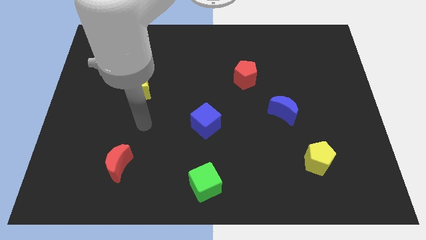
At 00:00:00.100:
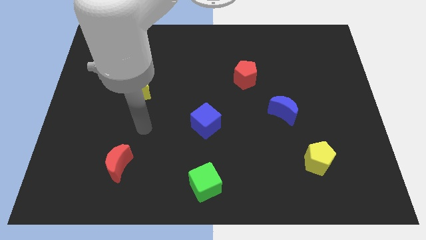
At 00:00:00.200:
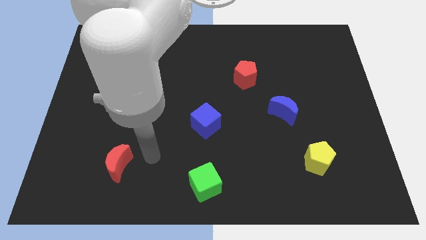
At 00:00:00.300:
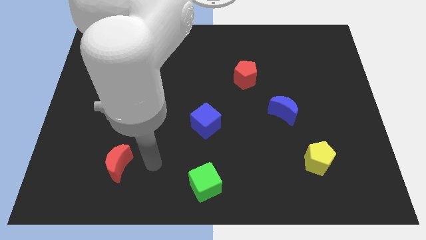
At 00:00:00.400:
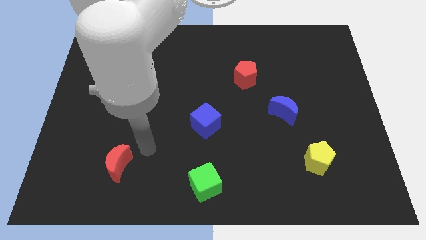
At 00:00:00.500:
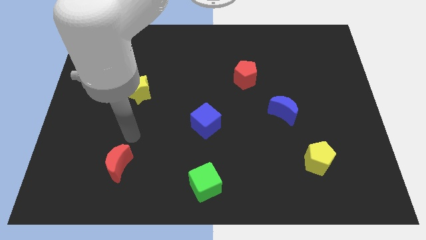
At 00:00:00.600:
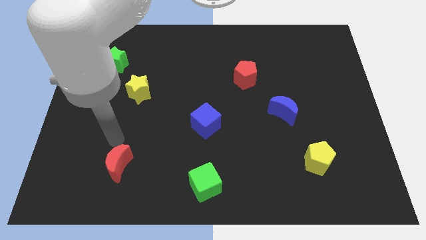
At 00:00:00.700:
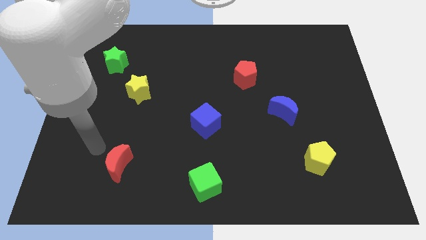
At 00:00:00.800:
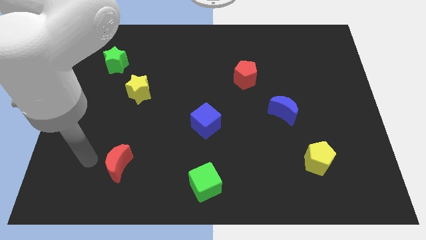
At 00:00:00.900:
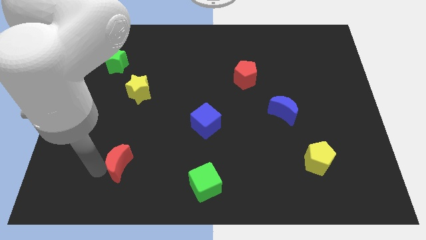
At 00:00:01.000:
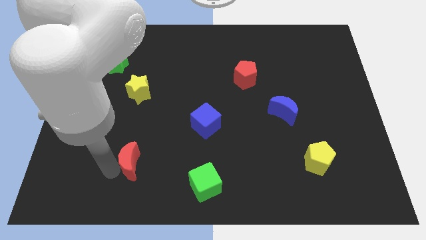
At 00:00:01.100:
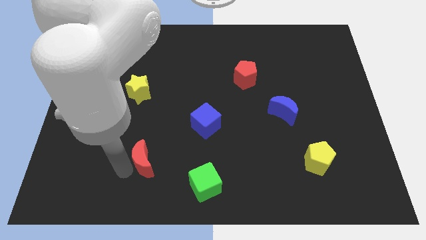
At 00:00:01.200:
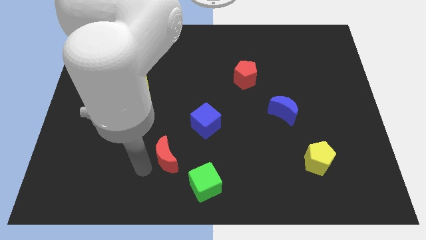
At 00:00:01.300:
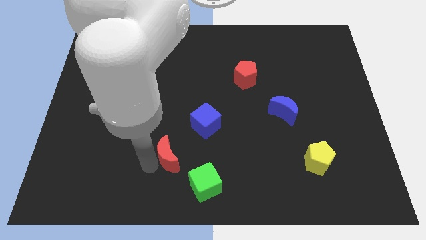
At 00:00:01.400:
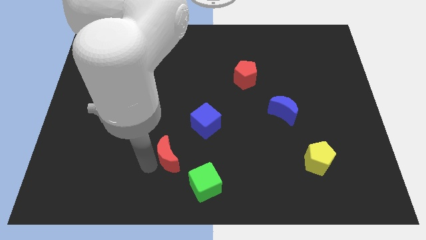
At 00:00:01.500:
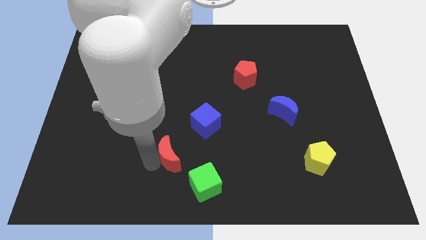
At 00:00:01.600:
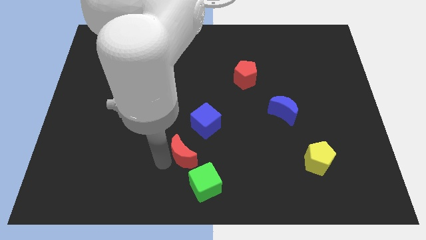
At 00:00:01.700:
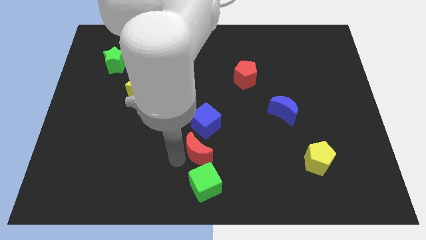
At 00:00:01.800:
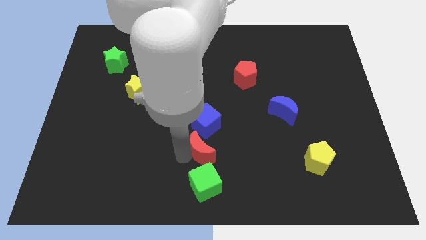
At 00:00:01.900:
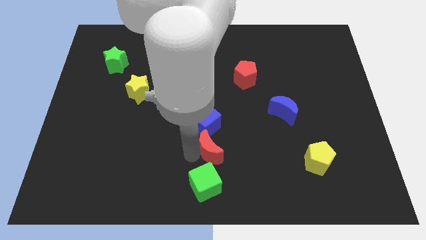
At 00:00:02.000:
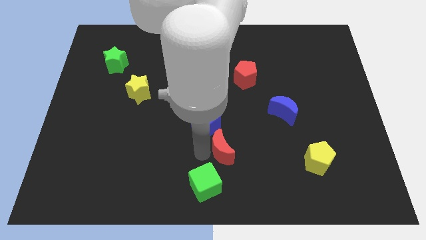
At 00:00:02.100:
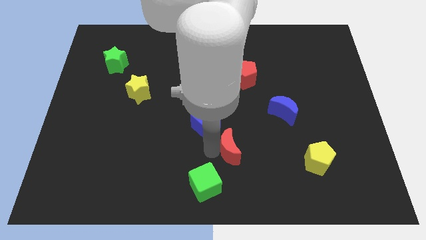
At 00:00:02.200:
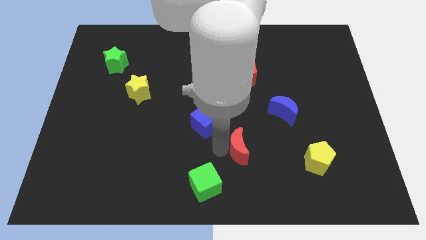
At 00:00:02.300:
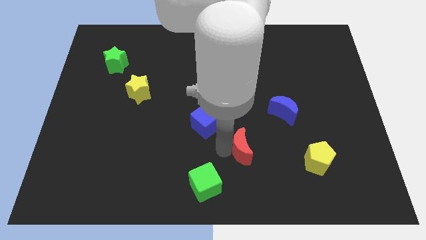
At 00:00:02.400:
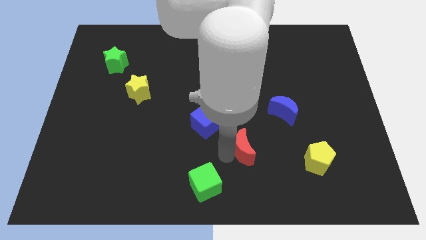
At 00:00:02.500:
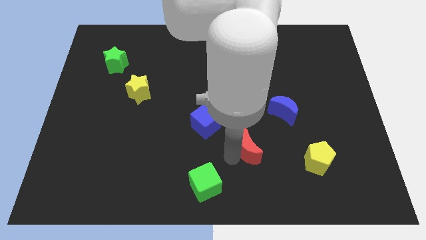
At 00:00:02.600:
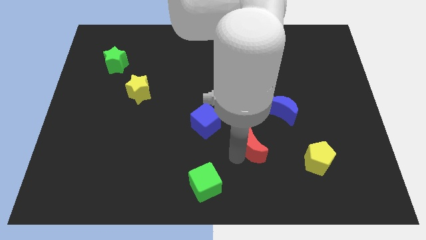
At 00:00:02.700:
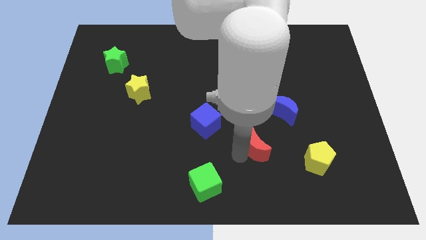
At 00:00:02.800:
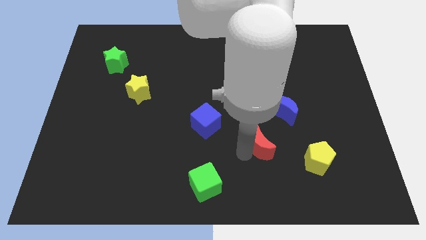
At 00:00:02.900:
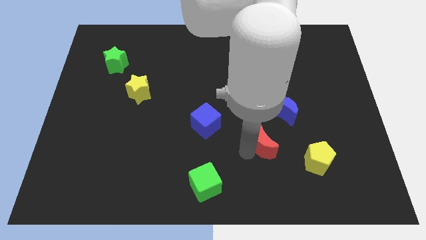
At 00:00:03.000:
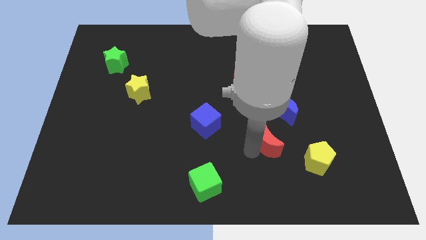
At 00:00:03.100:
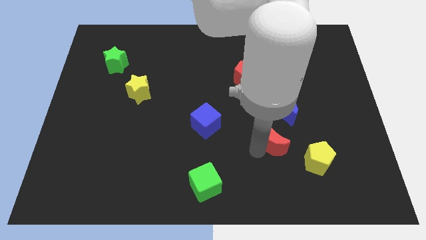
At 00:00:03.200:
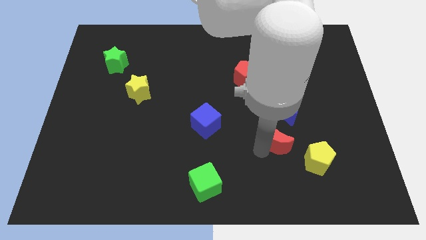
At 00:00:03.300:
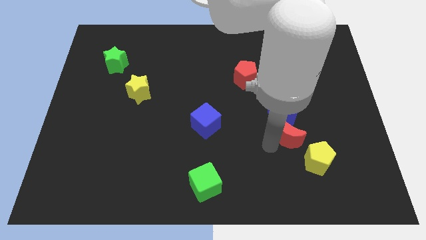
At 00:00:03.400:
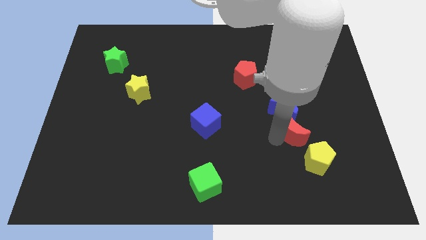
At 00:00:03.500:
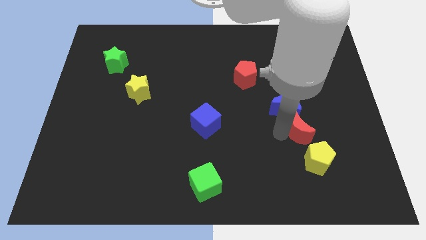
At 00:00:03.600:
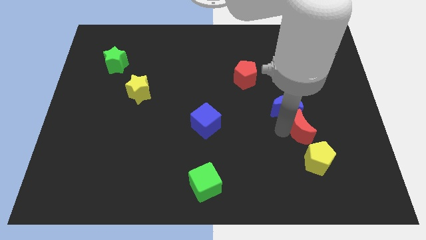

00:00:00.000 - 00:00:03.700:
slide the red moon to the blue moon

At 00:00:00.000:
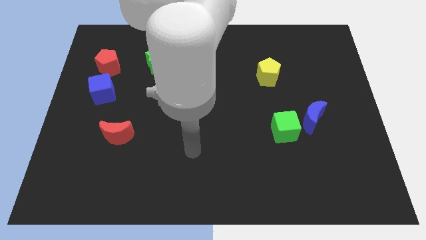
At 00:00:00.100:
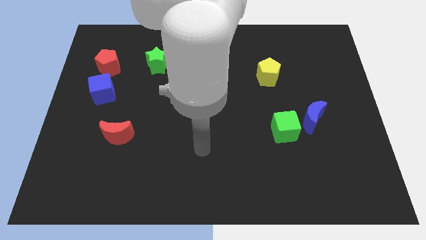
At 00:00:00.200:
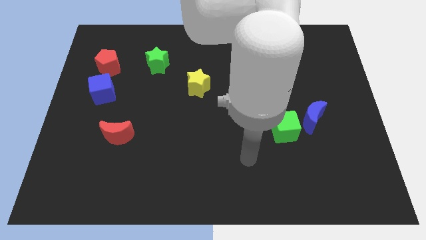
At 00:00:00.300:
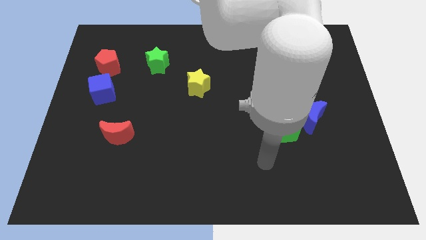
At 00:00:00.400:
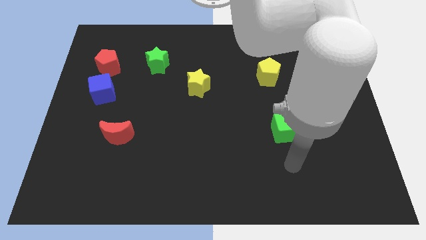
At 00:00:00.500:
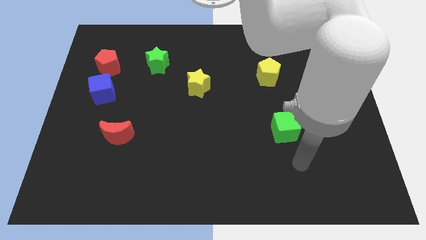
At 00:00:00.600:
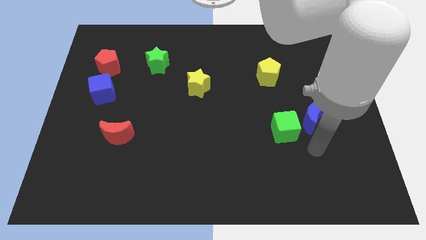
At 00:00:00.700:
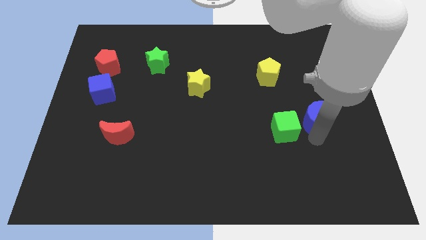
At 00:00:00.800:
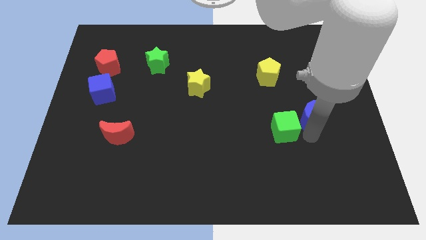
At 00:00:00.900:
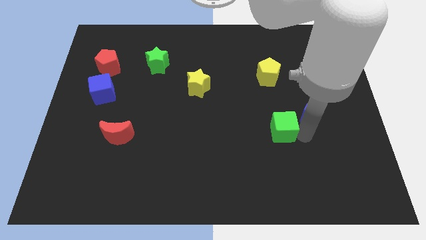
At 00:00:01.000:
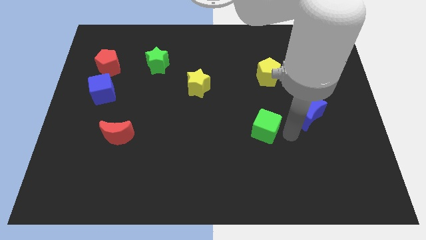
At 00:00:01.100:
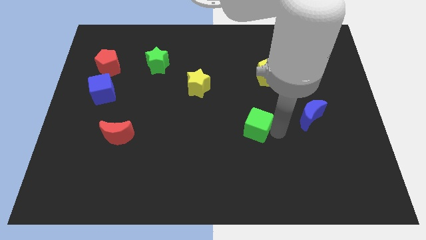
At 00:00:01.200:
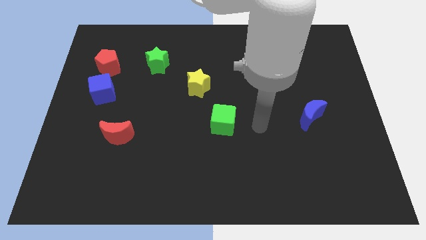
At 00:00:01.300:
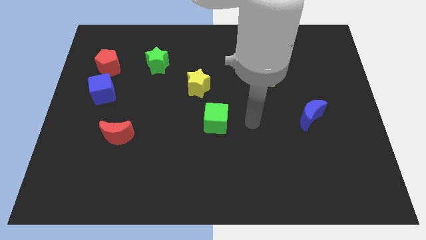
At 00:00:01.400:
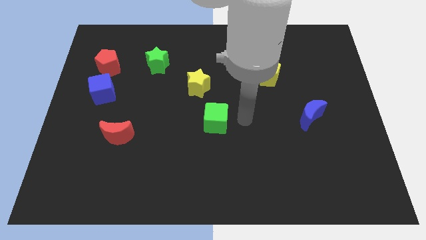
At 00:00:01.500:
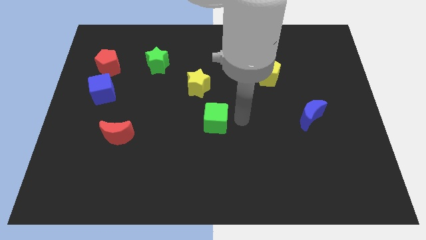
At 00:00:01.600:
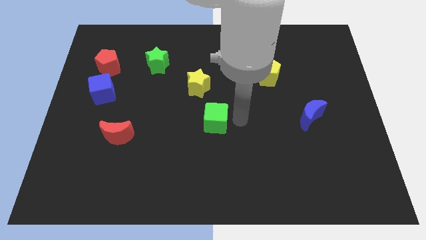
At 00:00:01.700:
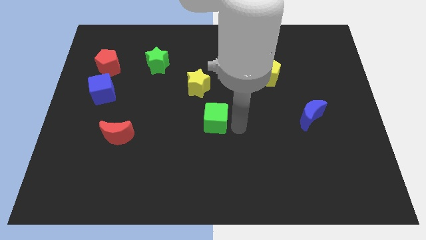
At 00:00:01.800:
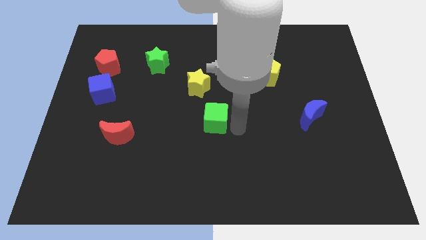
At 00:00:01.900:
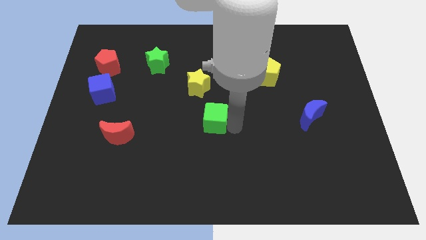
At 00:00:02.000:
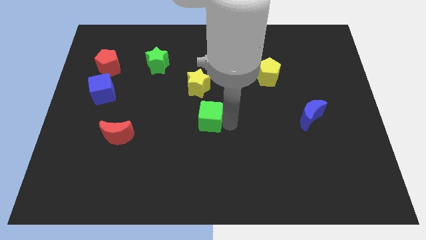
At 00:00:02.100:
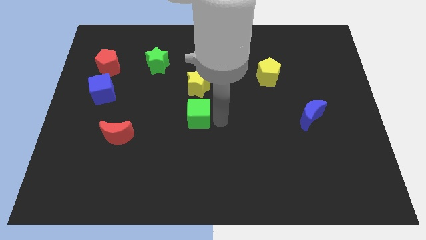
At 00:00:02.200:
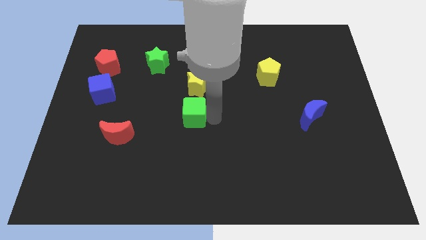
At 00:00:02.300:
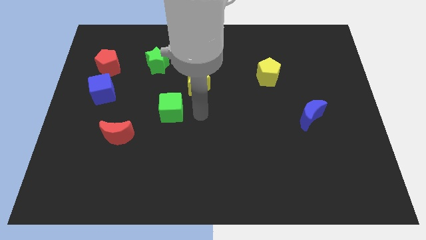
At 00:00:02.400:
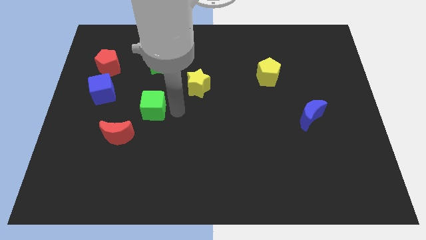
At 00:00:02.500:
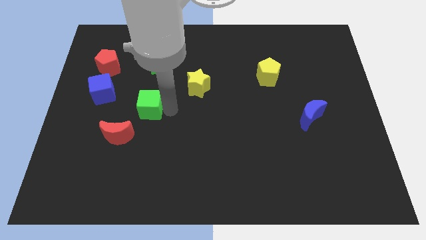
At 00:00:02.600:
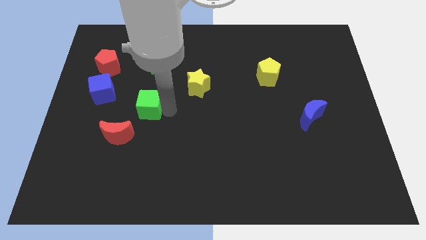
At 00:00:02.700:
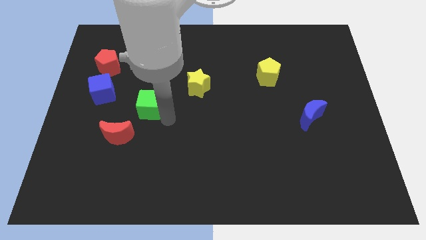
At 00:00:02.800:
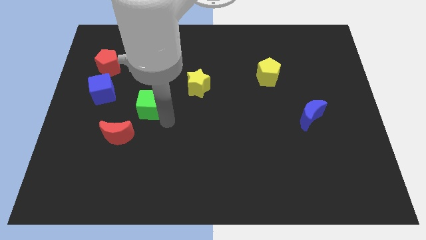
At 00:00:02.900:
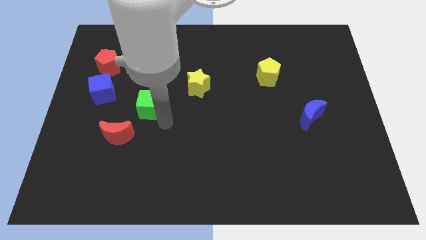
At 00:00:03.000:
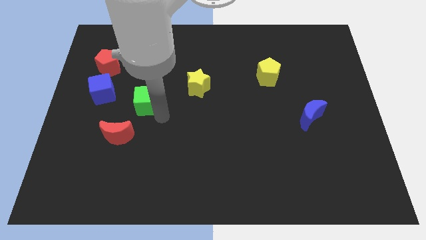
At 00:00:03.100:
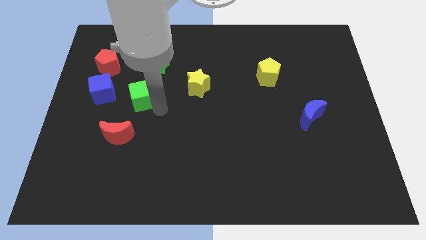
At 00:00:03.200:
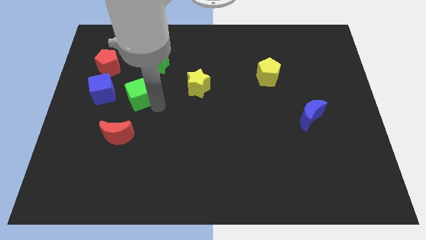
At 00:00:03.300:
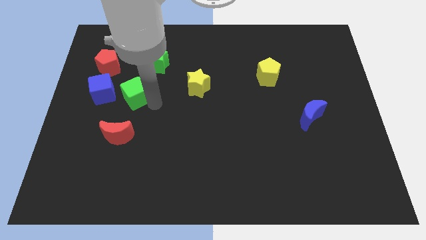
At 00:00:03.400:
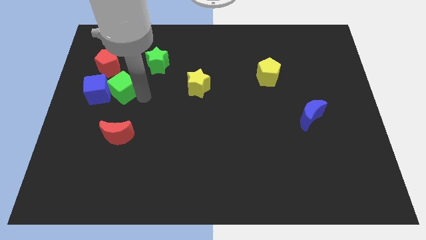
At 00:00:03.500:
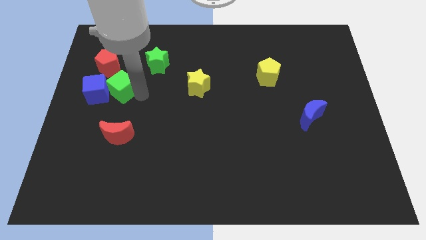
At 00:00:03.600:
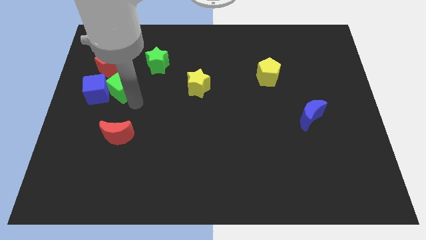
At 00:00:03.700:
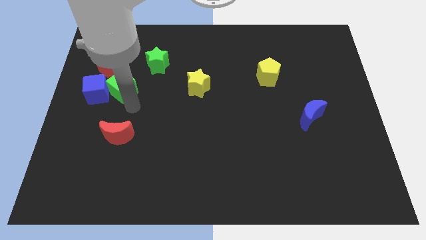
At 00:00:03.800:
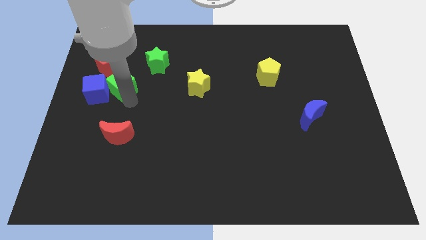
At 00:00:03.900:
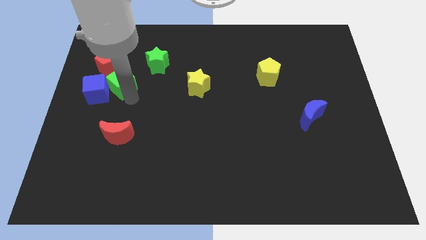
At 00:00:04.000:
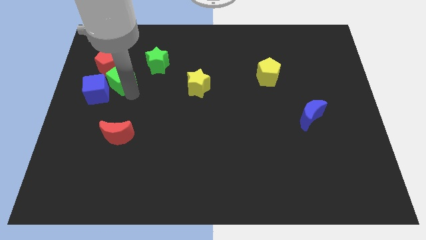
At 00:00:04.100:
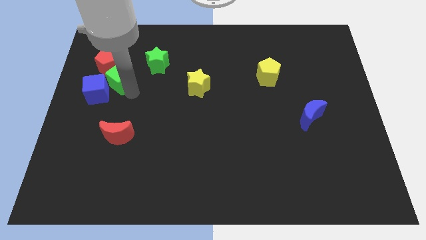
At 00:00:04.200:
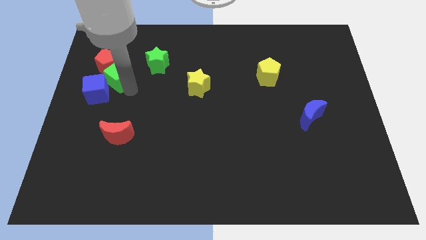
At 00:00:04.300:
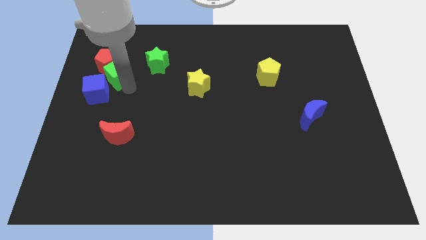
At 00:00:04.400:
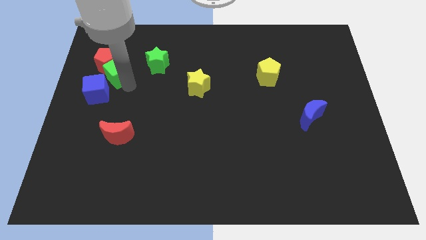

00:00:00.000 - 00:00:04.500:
slide the green cube towards the red pentagon
